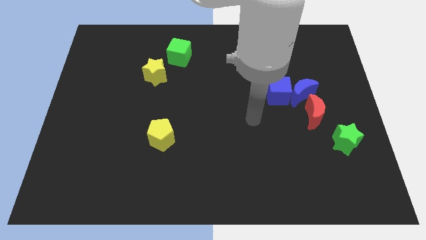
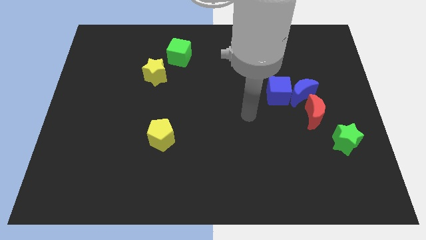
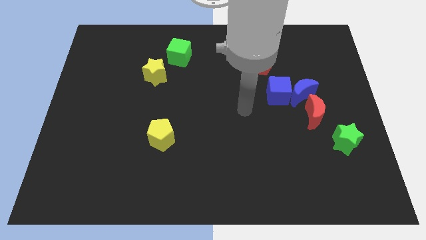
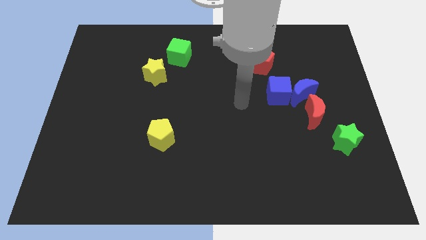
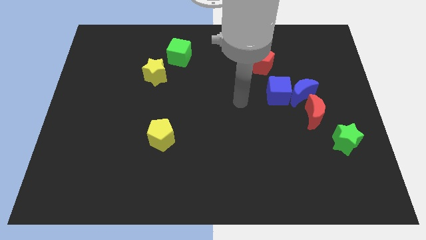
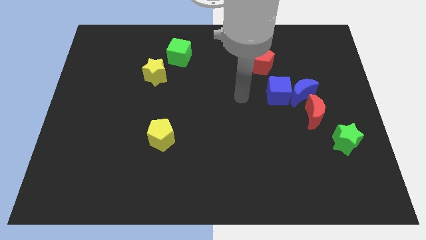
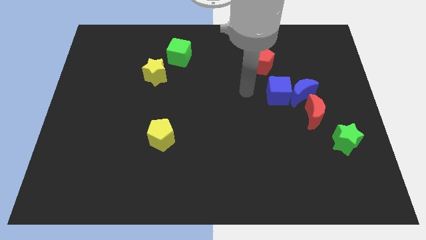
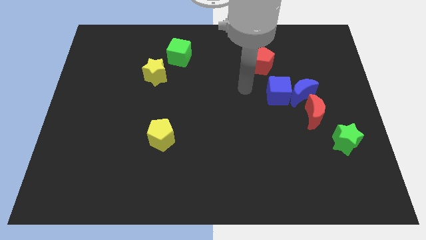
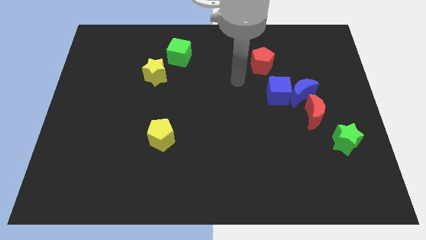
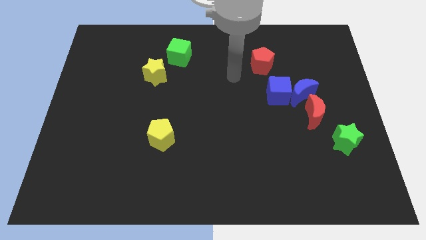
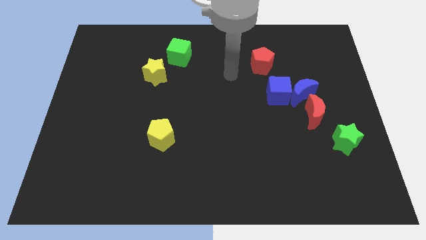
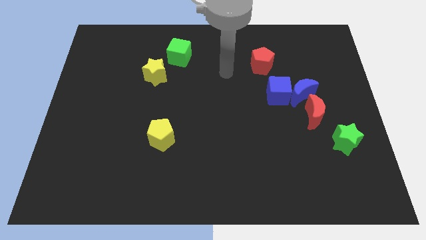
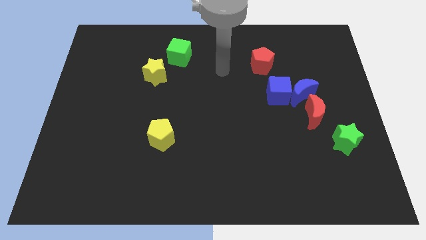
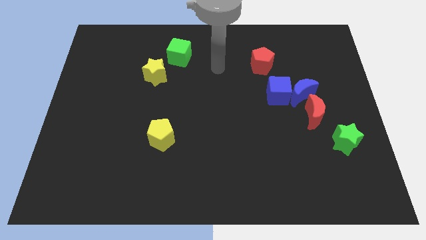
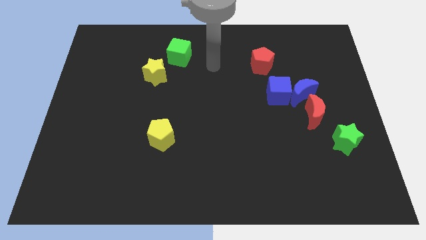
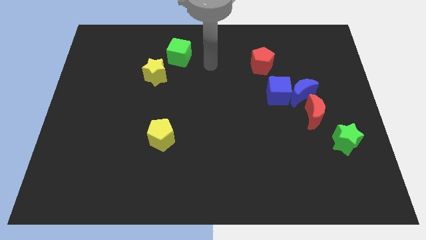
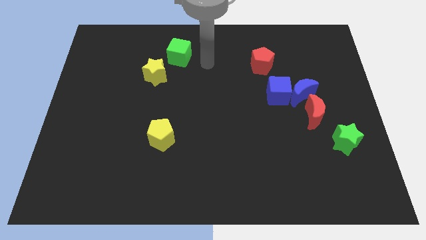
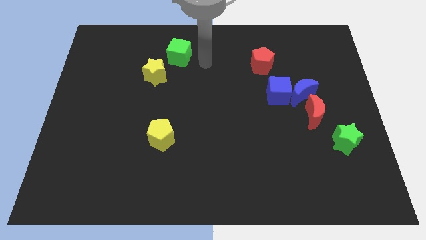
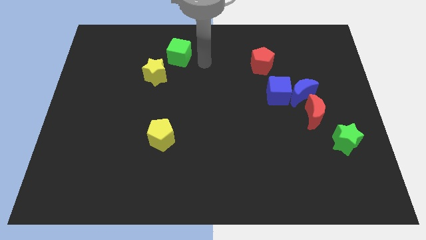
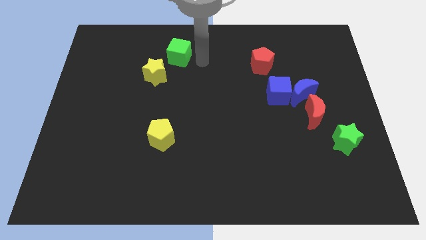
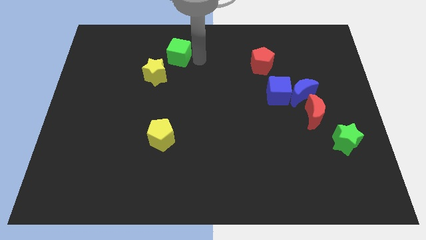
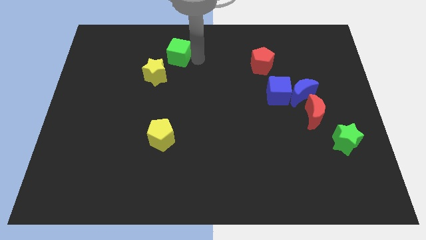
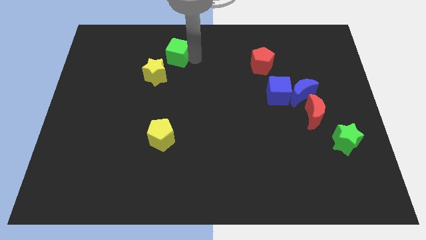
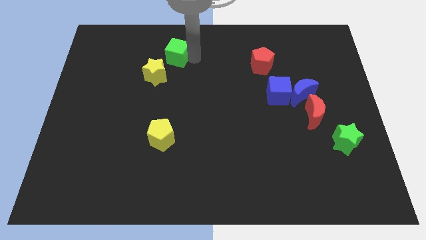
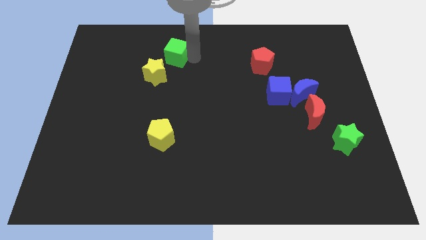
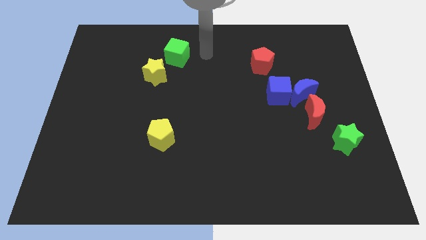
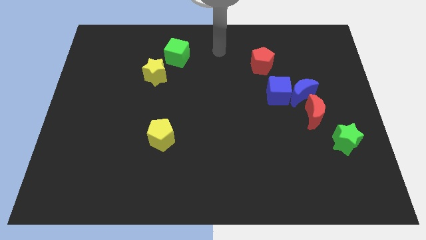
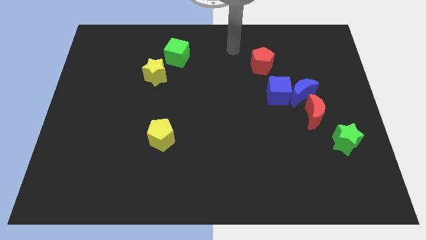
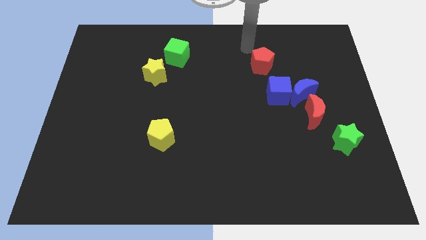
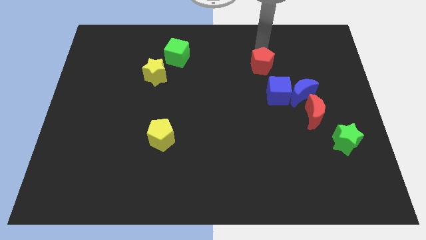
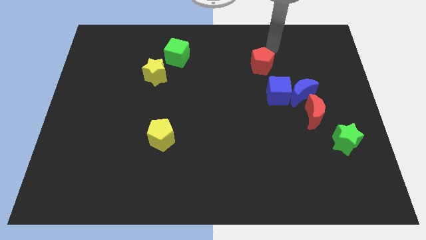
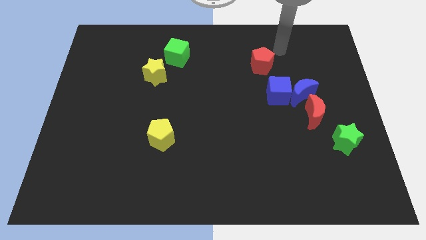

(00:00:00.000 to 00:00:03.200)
move your hand towards the top right side of the red pentagon

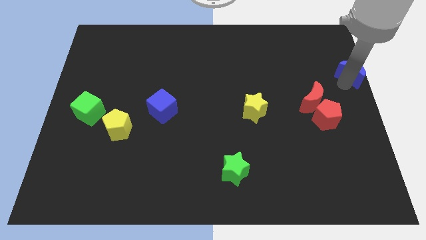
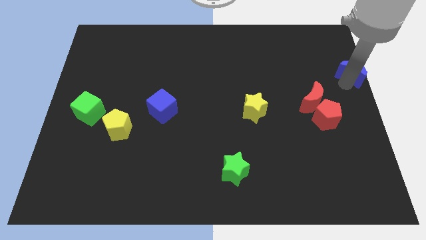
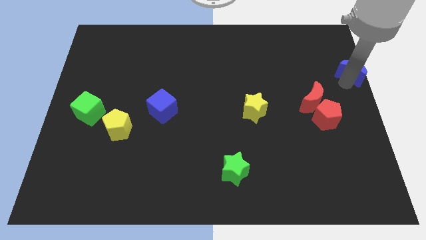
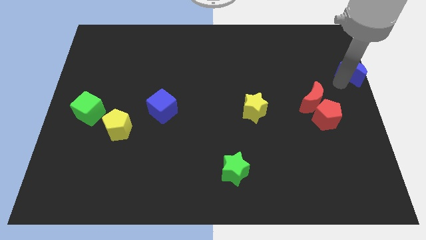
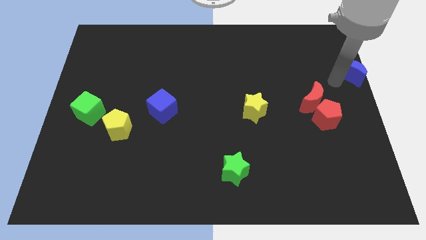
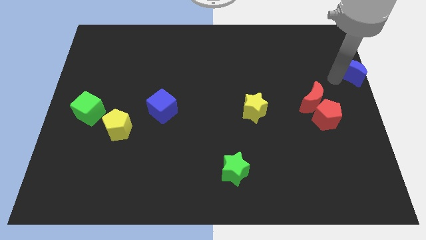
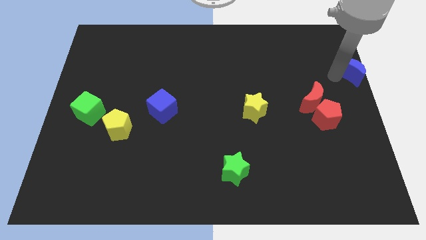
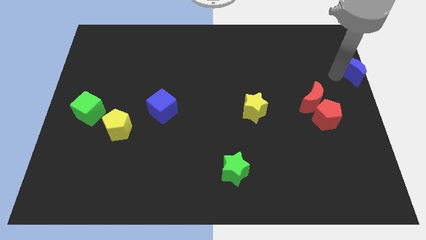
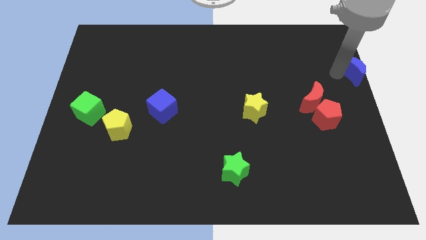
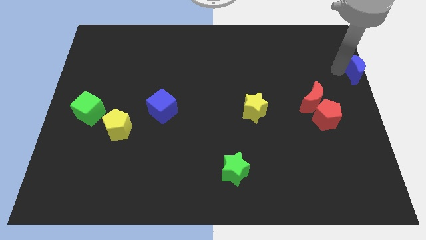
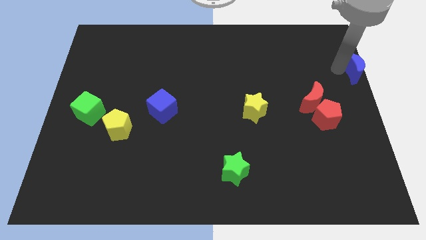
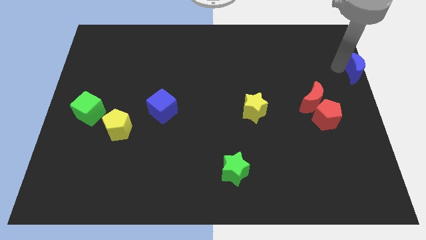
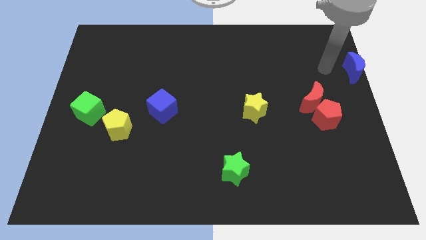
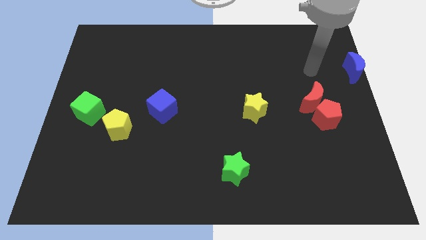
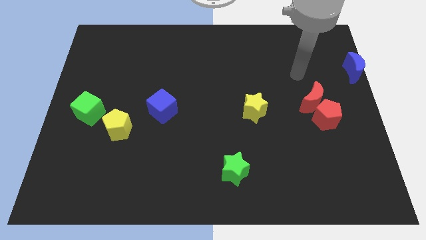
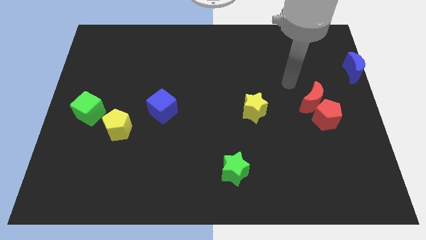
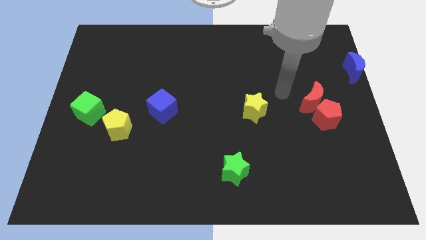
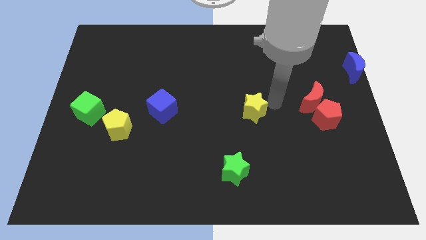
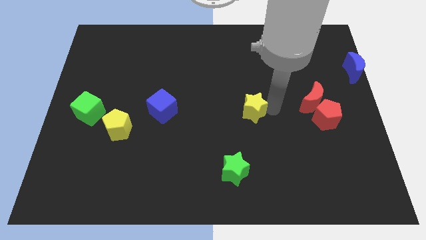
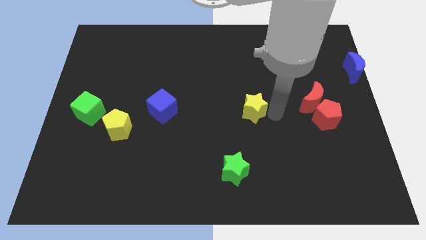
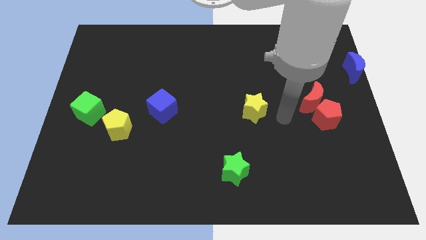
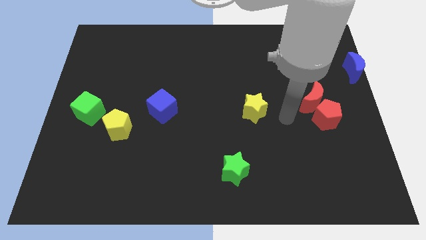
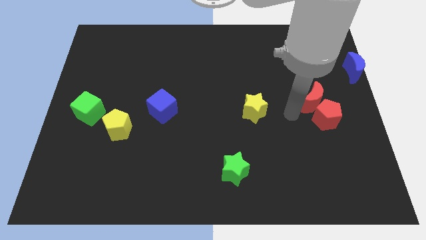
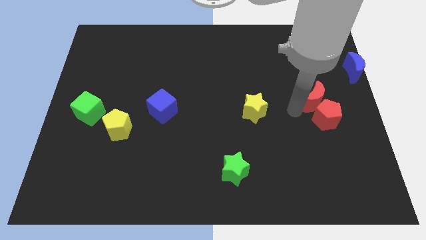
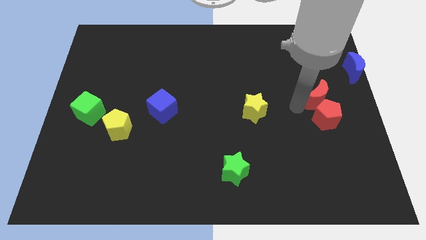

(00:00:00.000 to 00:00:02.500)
place your arm below the red crescent

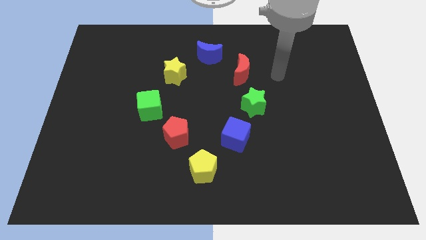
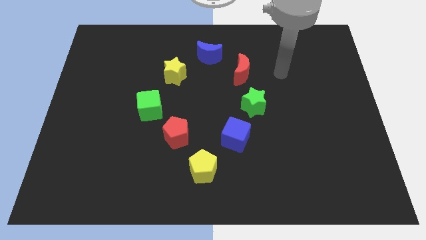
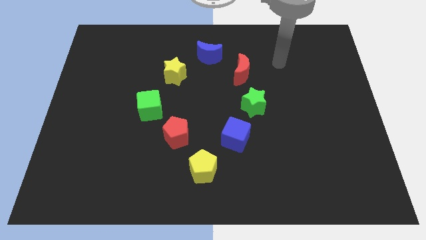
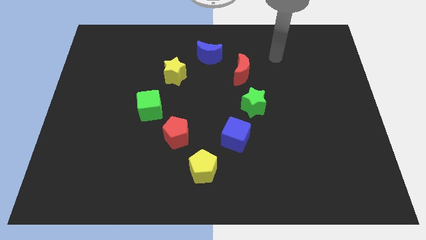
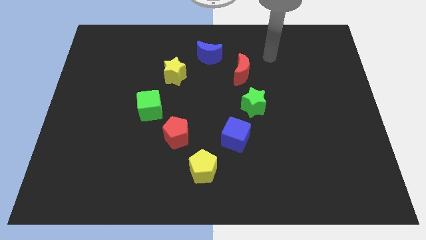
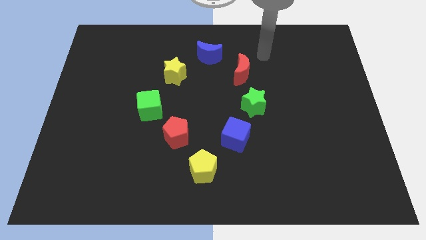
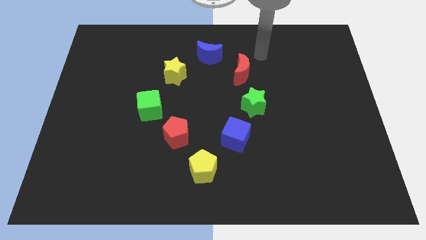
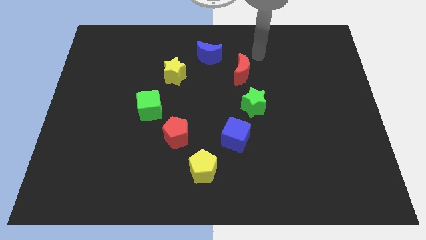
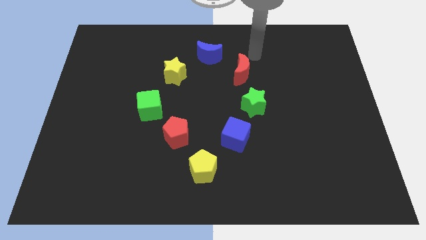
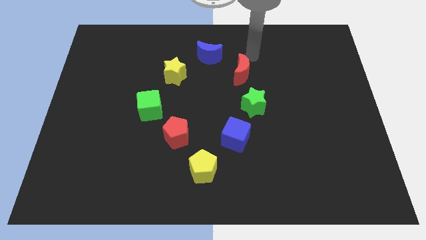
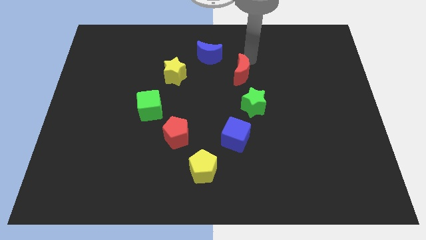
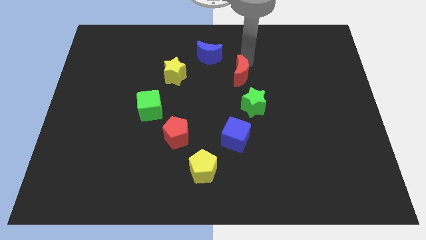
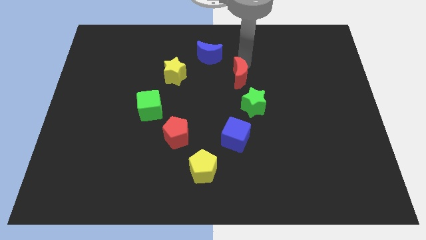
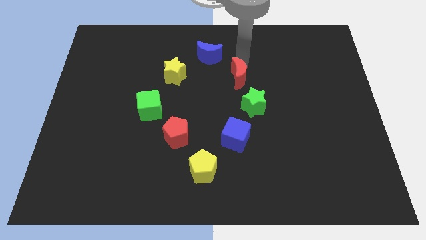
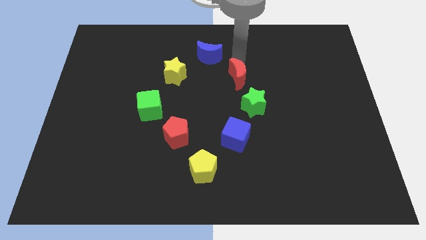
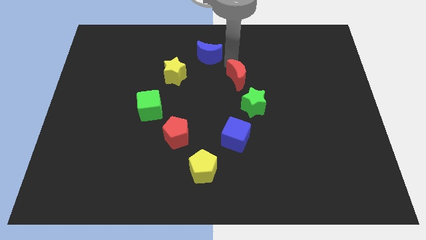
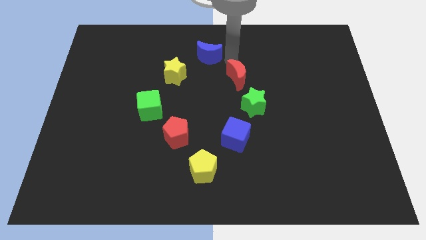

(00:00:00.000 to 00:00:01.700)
move the red crescent in between the blue crescent and green star

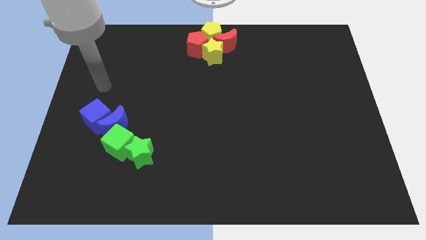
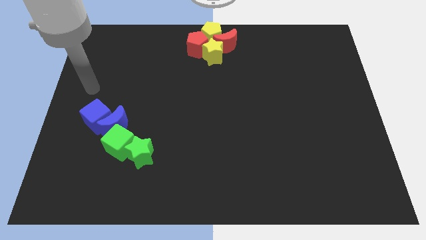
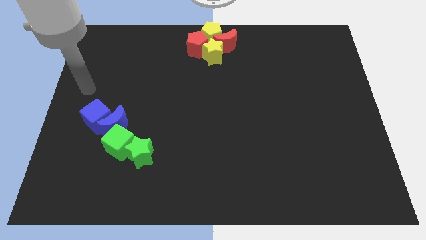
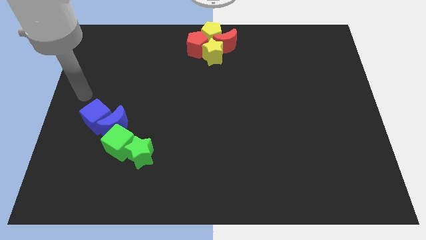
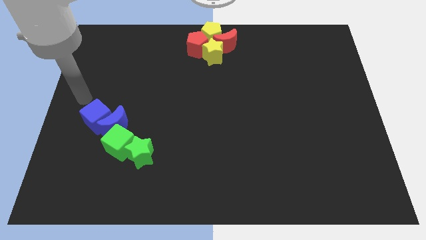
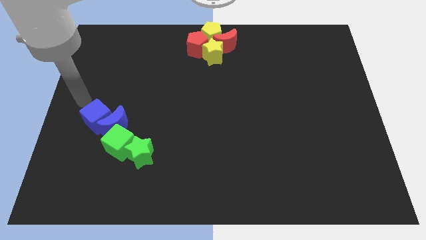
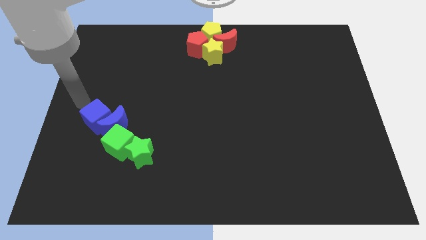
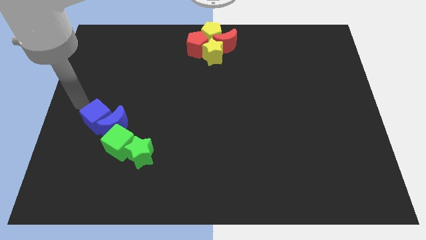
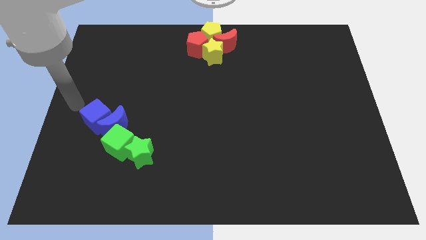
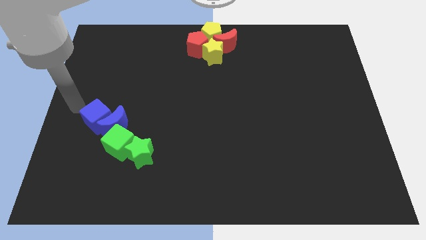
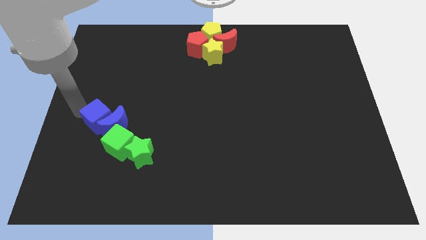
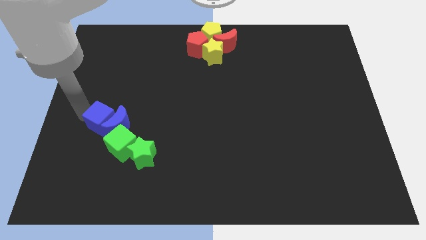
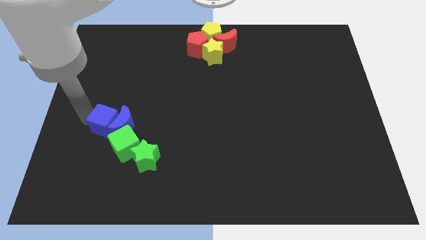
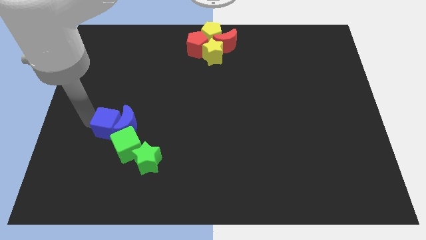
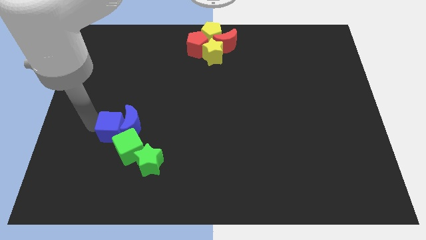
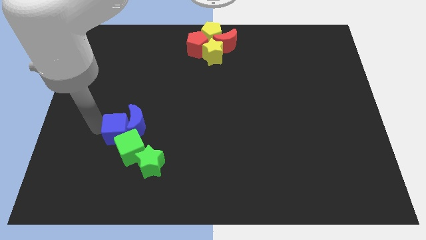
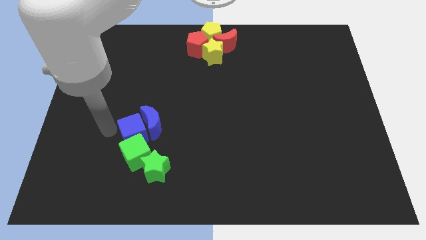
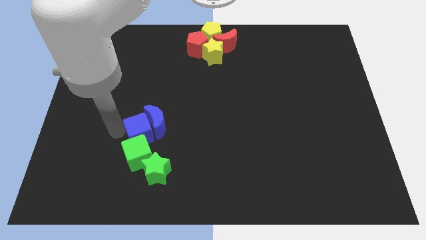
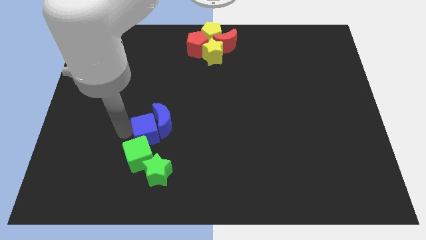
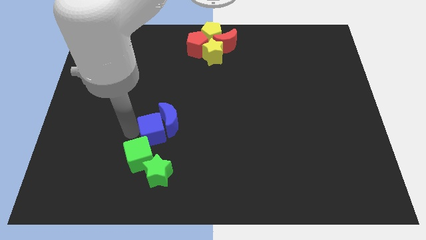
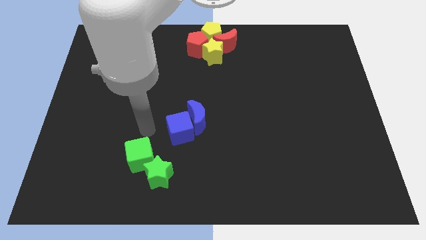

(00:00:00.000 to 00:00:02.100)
move the blue cube to the right side
